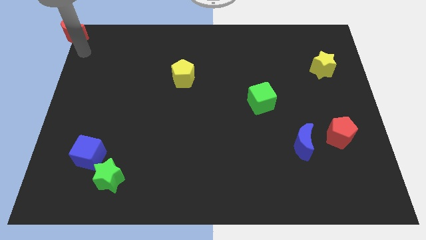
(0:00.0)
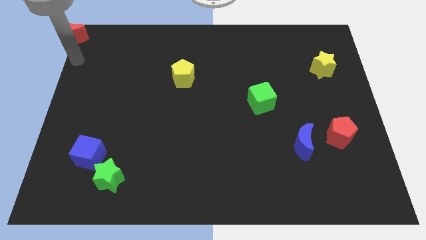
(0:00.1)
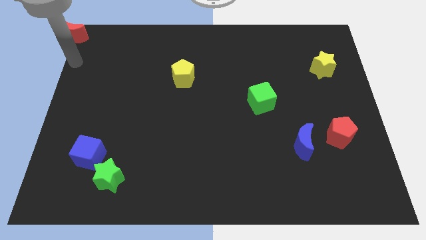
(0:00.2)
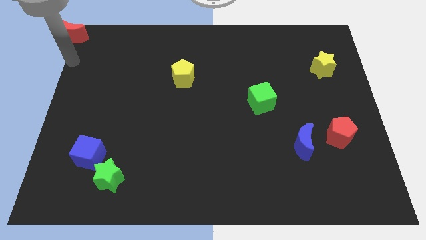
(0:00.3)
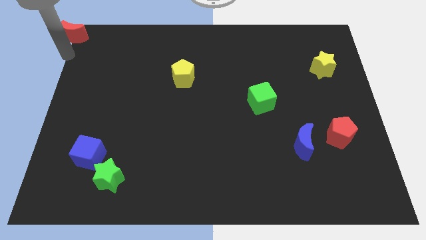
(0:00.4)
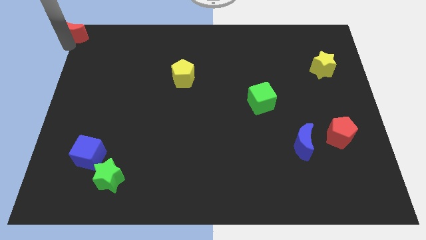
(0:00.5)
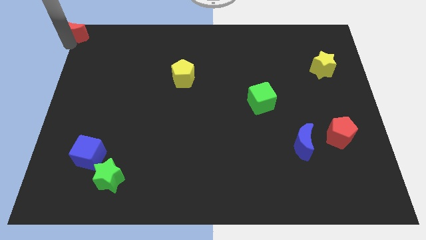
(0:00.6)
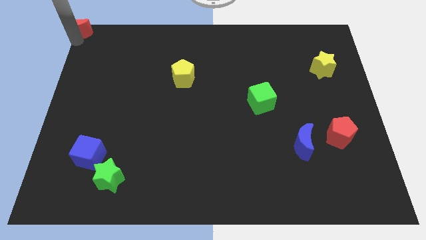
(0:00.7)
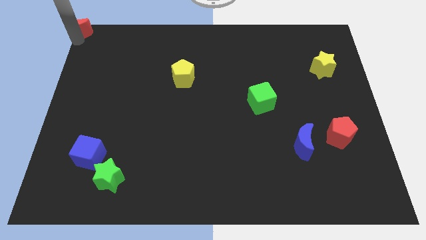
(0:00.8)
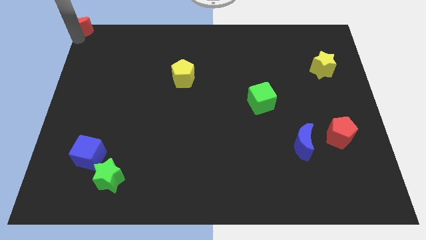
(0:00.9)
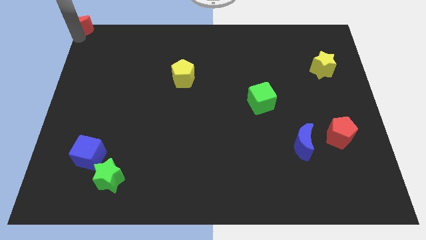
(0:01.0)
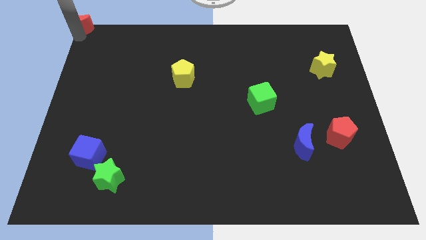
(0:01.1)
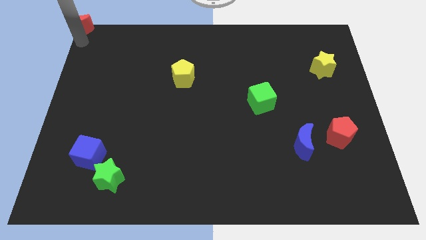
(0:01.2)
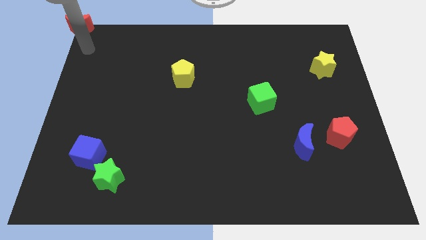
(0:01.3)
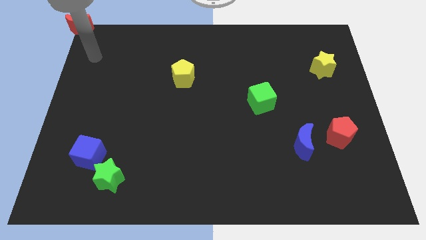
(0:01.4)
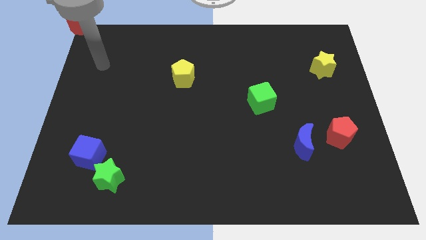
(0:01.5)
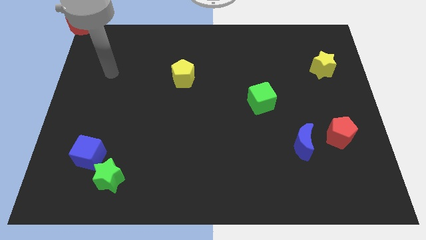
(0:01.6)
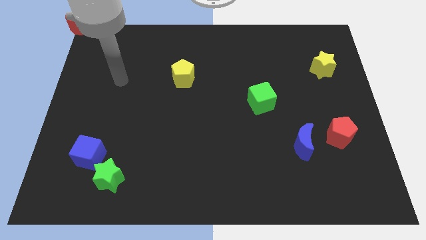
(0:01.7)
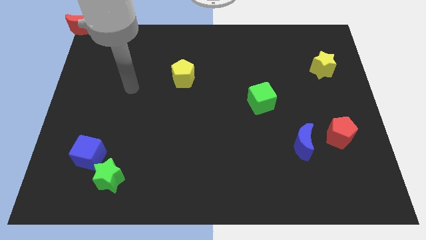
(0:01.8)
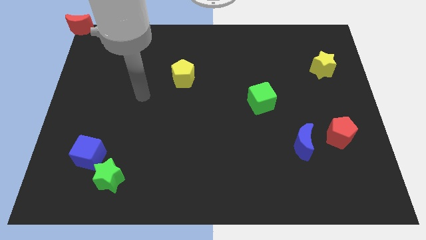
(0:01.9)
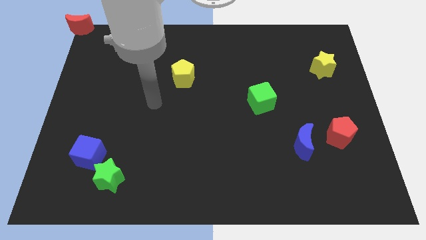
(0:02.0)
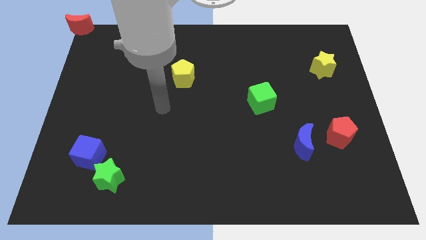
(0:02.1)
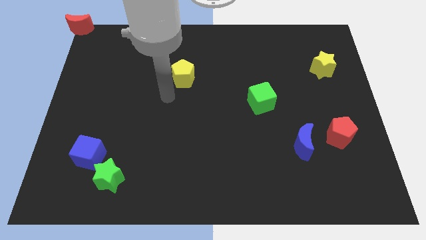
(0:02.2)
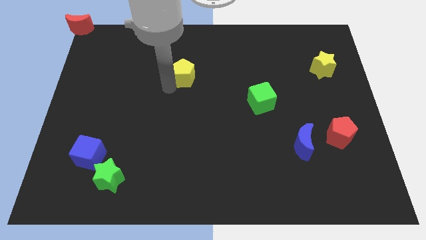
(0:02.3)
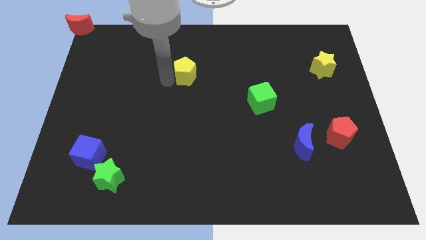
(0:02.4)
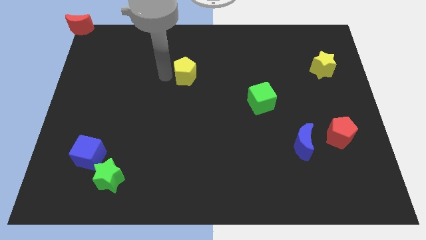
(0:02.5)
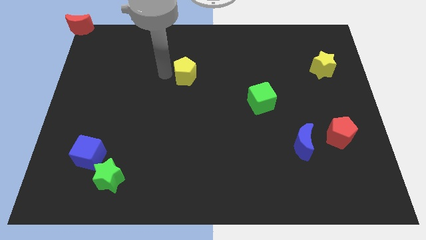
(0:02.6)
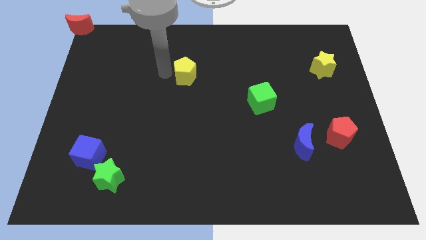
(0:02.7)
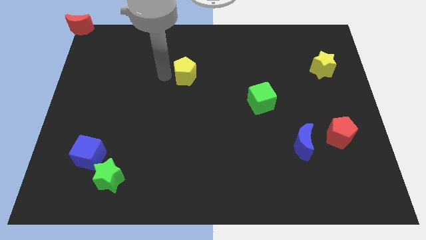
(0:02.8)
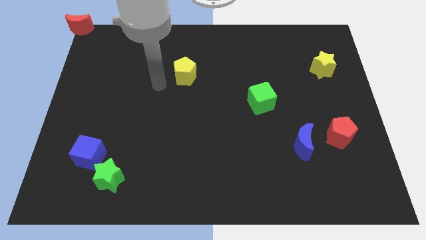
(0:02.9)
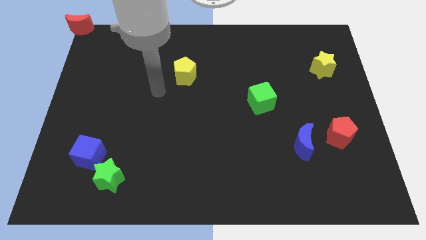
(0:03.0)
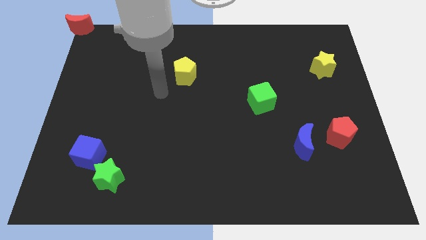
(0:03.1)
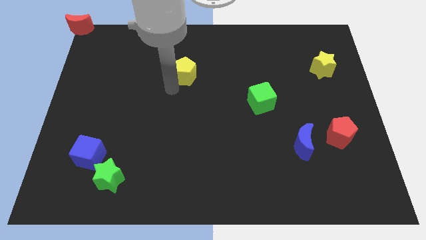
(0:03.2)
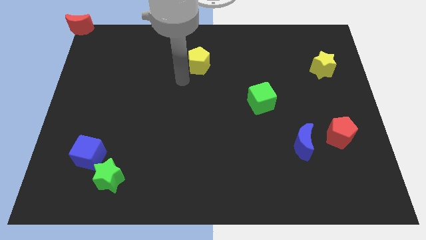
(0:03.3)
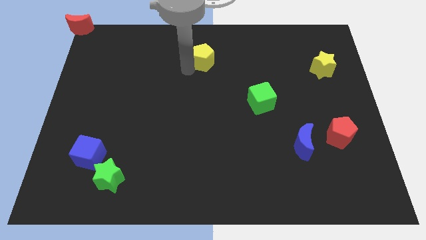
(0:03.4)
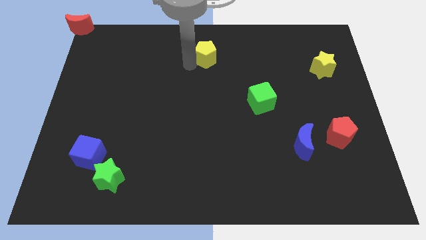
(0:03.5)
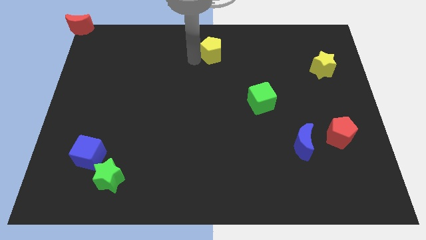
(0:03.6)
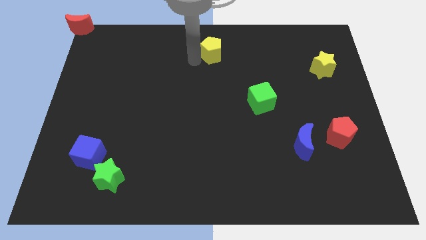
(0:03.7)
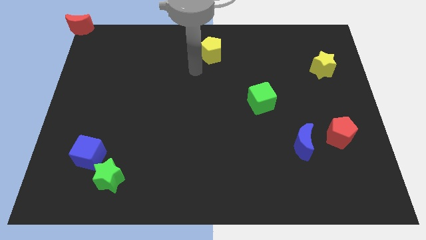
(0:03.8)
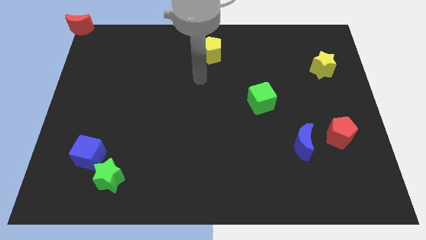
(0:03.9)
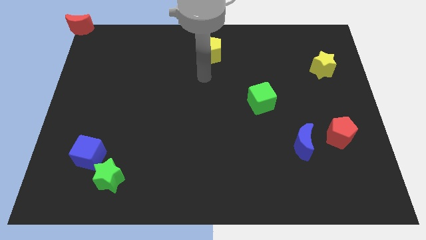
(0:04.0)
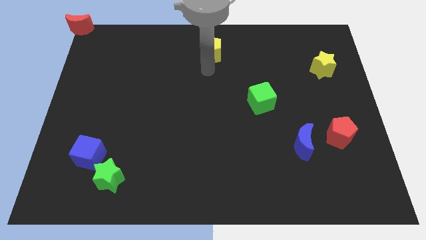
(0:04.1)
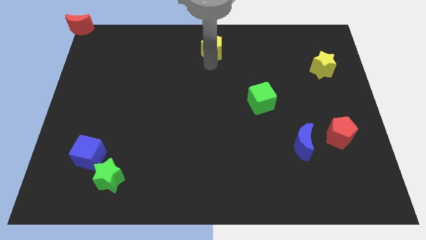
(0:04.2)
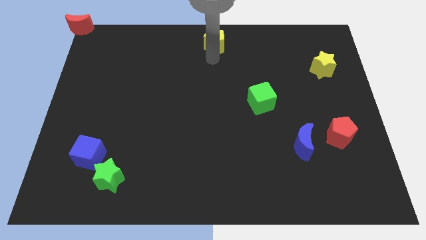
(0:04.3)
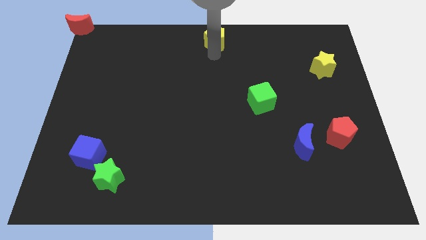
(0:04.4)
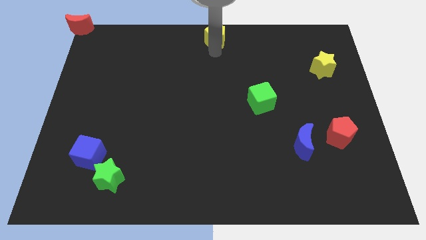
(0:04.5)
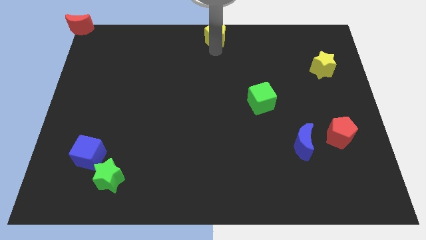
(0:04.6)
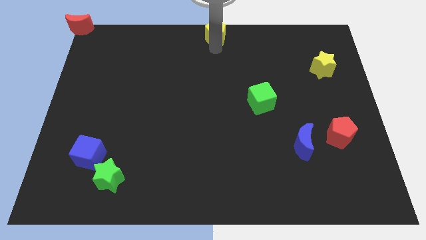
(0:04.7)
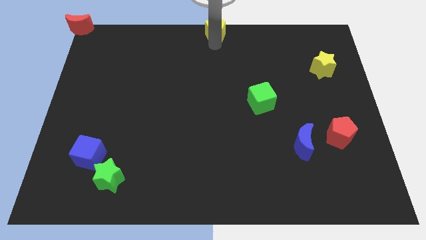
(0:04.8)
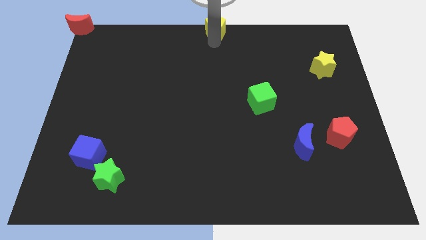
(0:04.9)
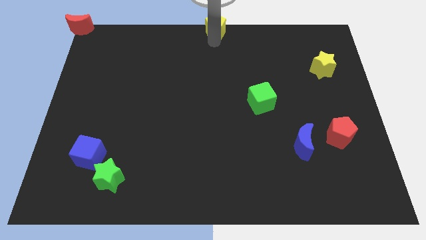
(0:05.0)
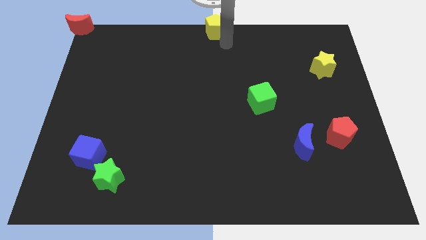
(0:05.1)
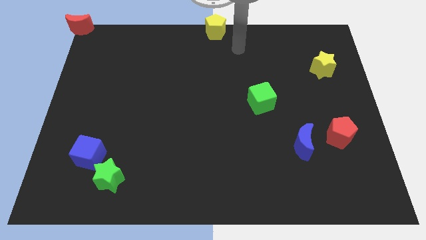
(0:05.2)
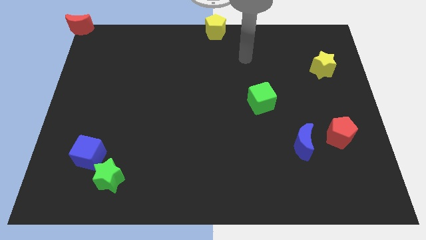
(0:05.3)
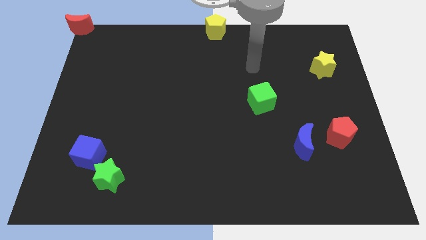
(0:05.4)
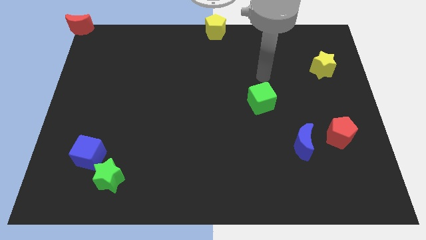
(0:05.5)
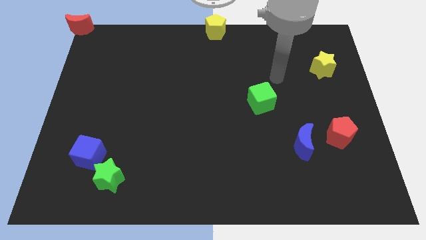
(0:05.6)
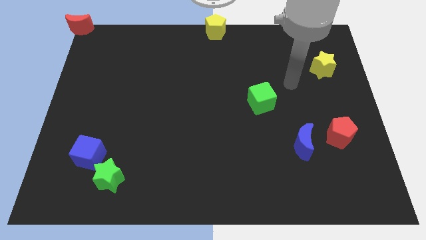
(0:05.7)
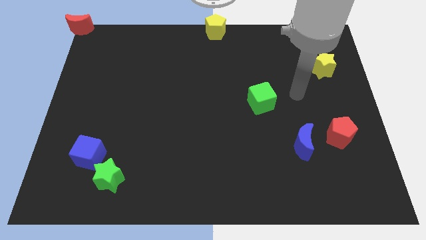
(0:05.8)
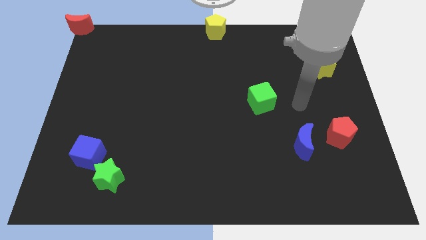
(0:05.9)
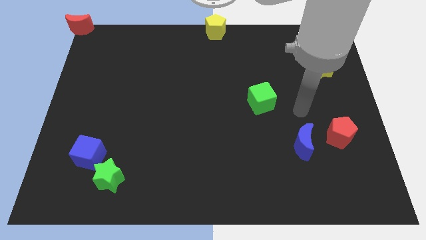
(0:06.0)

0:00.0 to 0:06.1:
slide the yellow pentagon to the top center

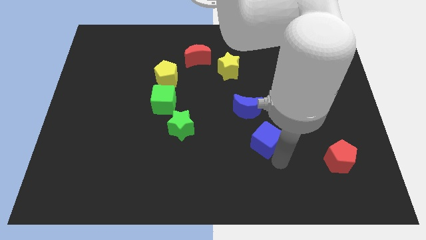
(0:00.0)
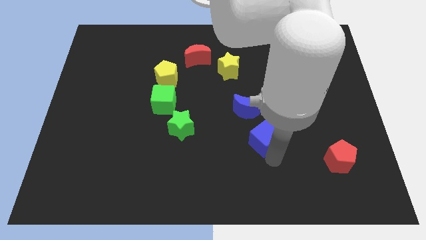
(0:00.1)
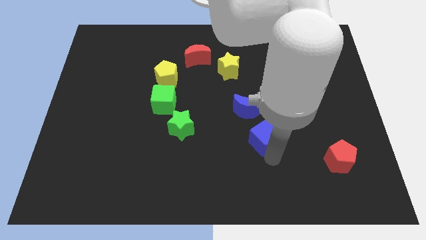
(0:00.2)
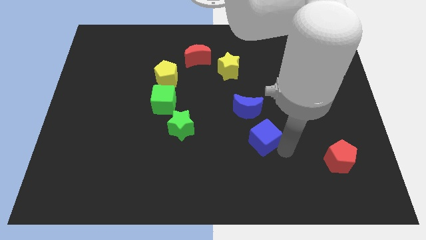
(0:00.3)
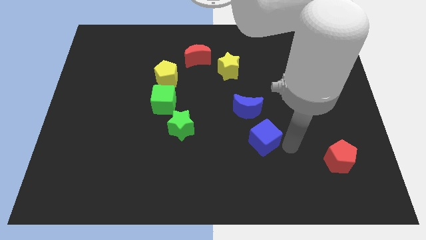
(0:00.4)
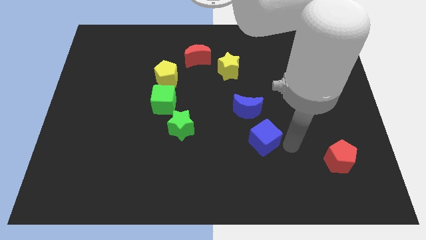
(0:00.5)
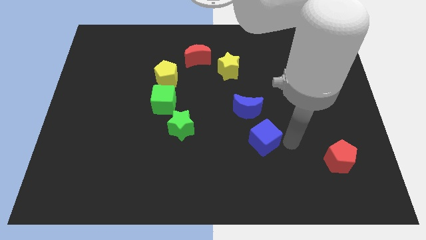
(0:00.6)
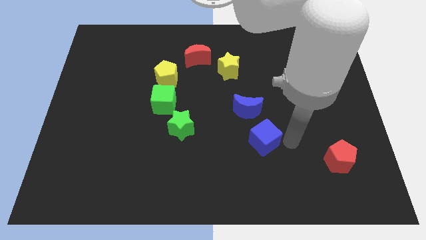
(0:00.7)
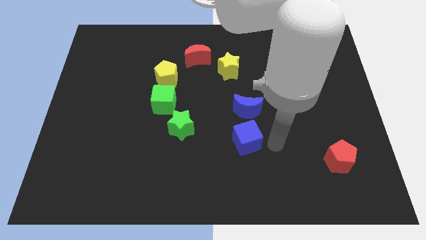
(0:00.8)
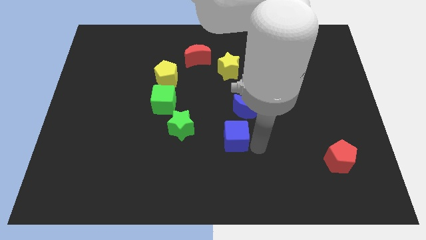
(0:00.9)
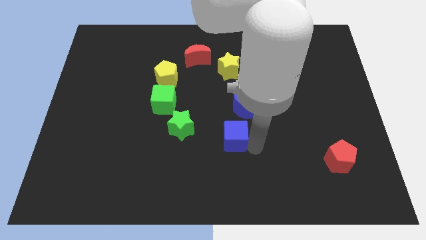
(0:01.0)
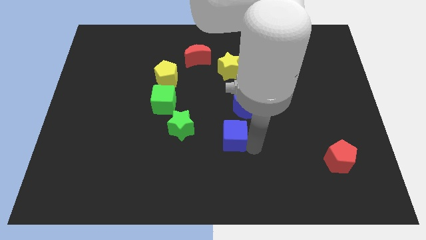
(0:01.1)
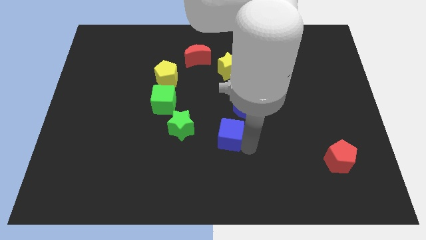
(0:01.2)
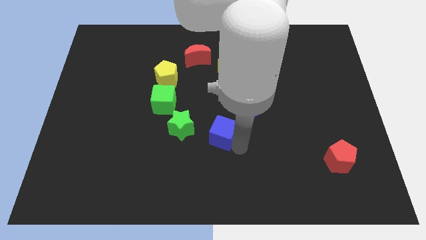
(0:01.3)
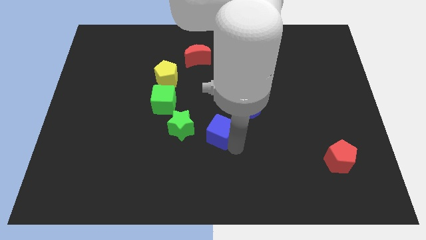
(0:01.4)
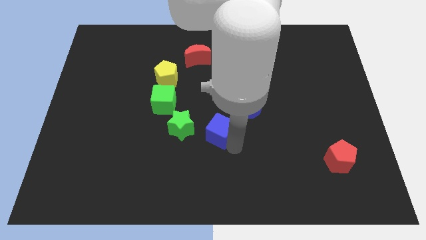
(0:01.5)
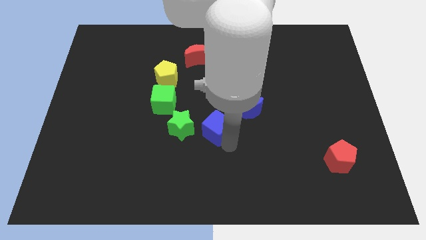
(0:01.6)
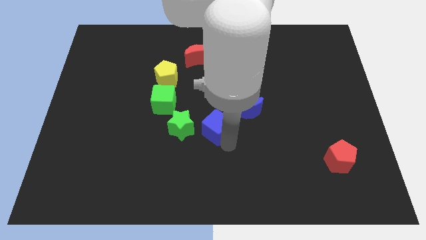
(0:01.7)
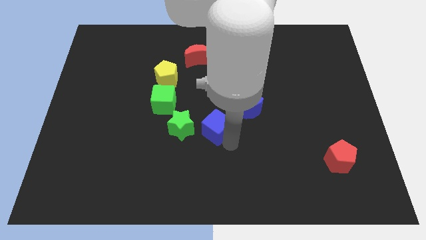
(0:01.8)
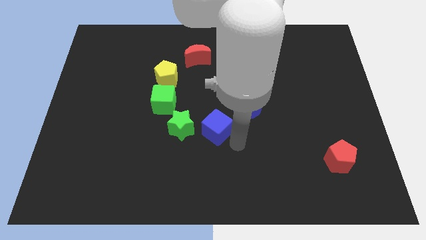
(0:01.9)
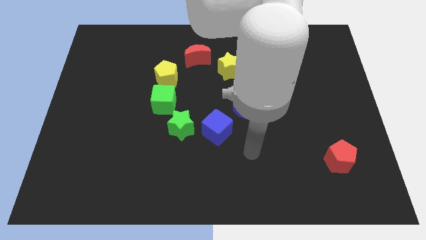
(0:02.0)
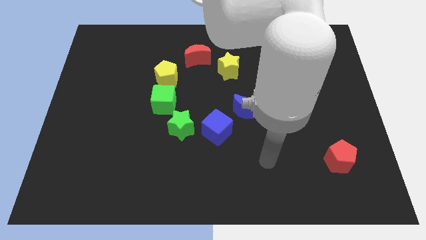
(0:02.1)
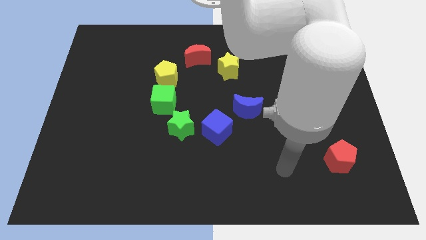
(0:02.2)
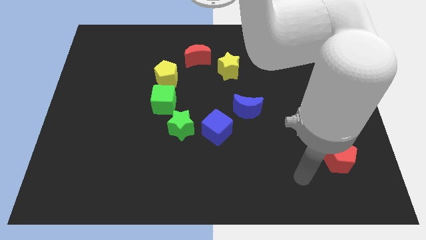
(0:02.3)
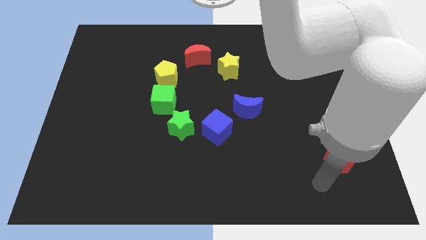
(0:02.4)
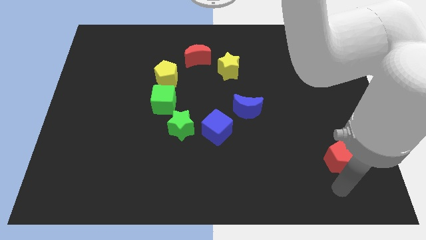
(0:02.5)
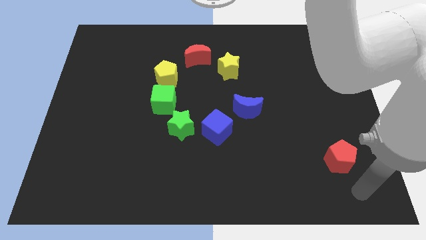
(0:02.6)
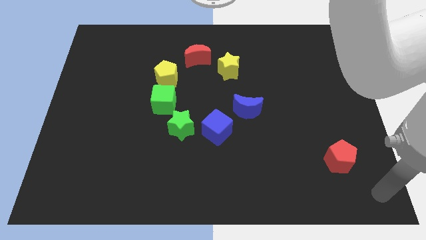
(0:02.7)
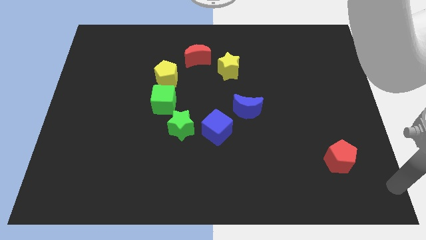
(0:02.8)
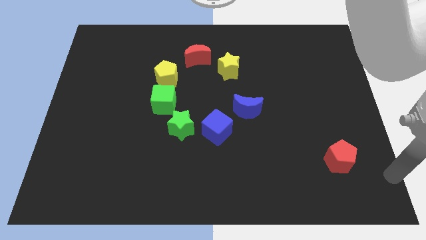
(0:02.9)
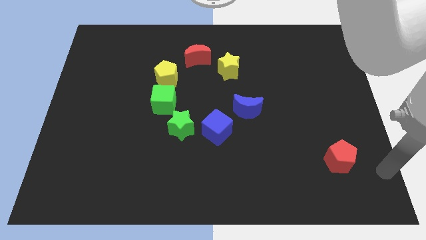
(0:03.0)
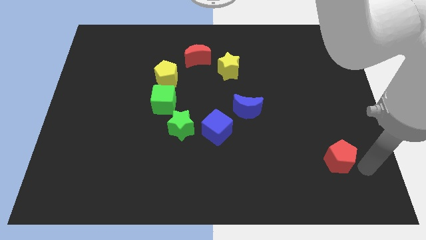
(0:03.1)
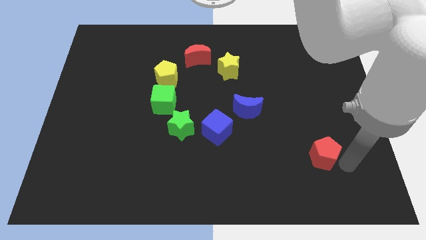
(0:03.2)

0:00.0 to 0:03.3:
move the blue cube parallel right to the green star
